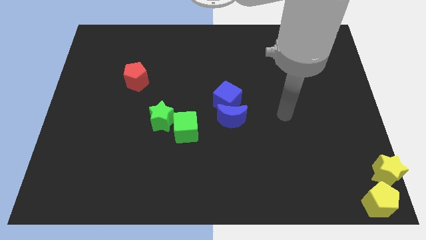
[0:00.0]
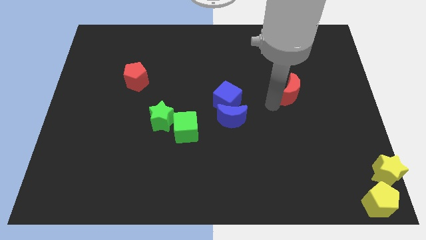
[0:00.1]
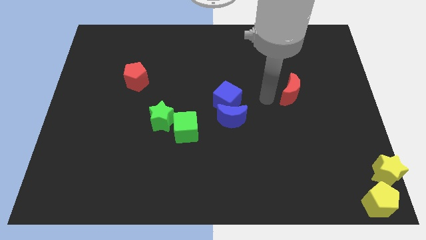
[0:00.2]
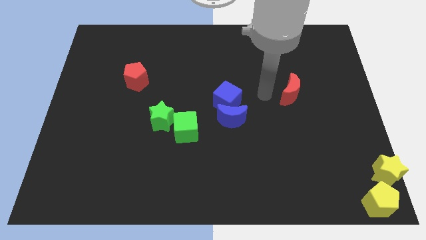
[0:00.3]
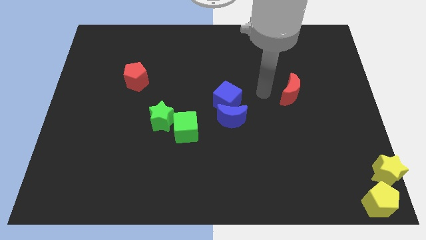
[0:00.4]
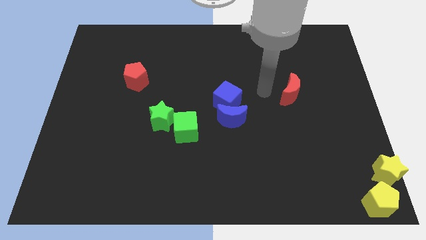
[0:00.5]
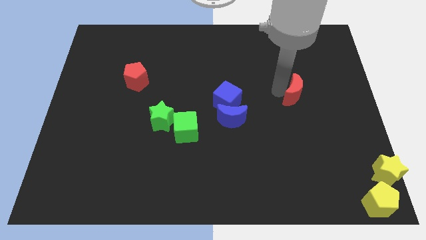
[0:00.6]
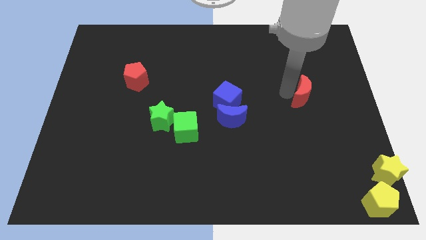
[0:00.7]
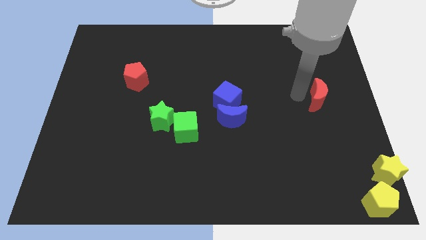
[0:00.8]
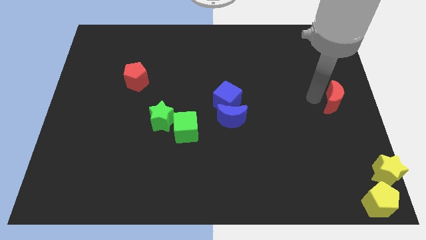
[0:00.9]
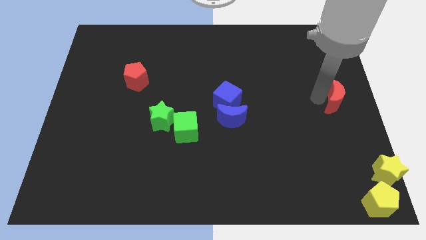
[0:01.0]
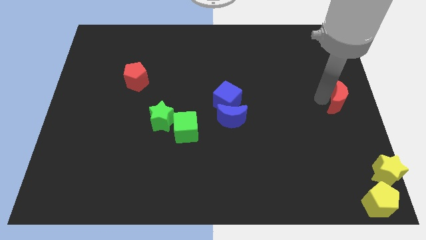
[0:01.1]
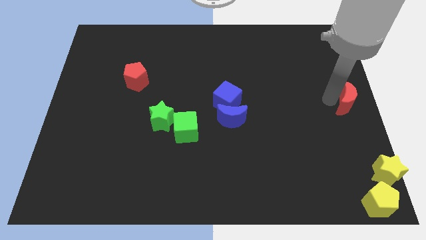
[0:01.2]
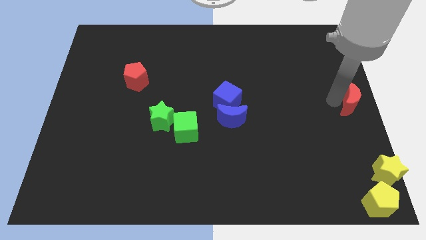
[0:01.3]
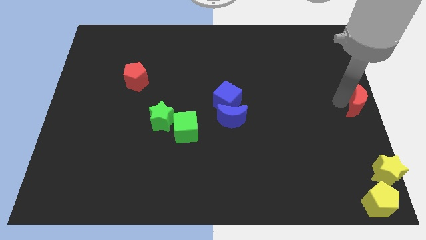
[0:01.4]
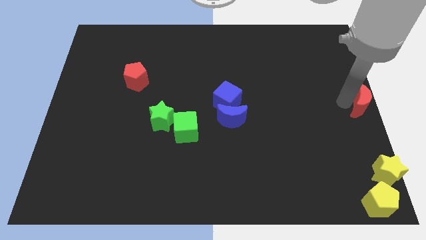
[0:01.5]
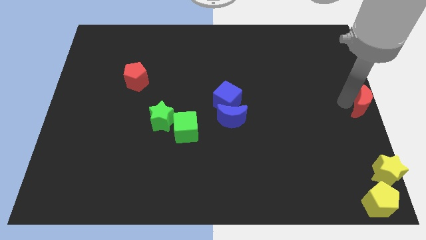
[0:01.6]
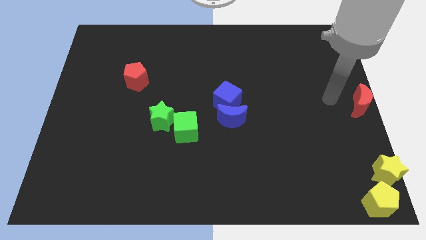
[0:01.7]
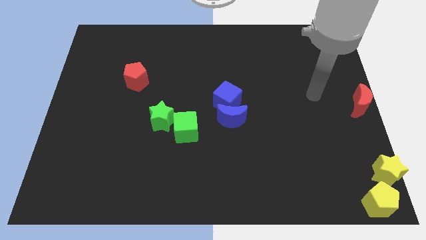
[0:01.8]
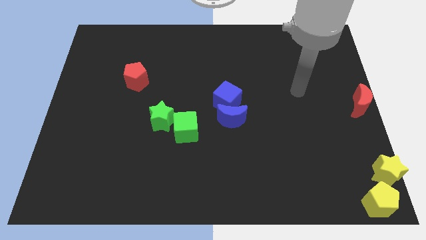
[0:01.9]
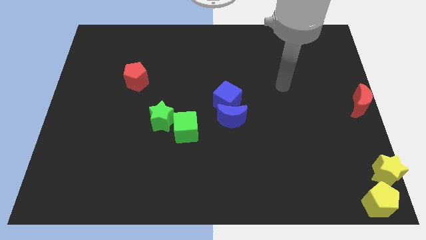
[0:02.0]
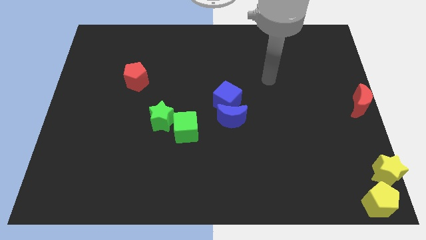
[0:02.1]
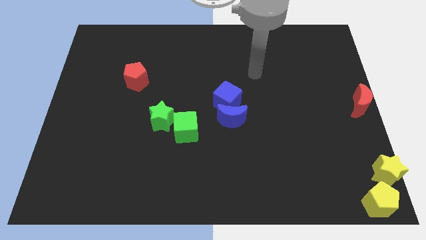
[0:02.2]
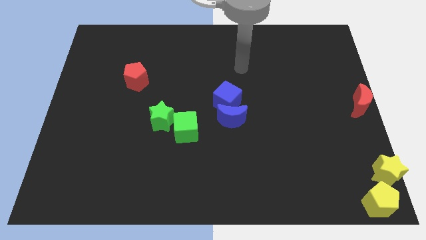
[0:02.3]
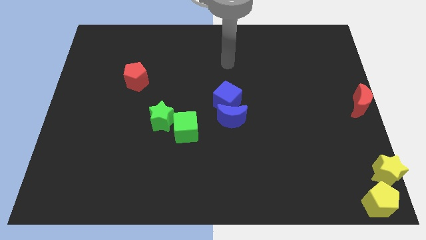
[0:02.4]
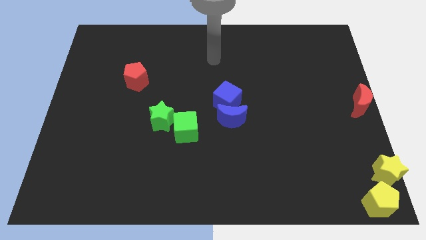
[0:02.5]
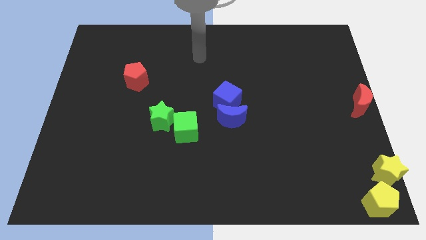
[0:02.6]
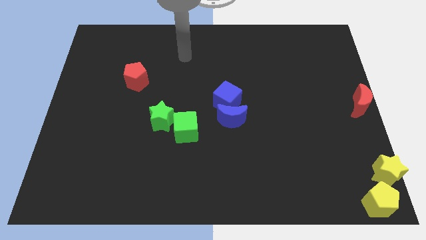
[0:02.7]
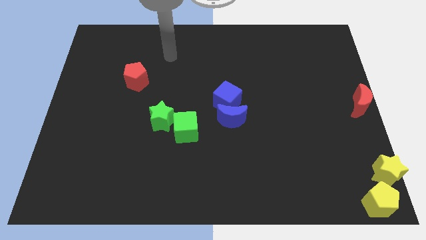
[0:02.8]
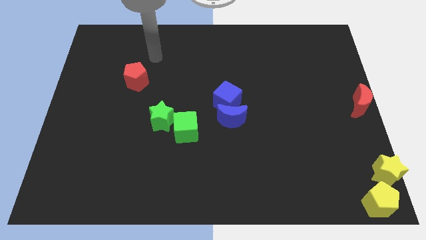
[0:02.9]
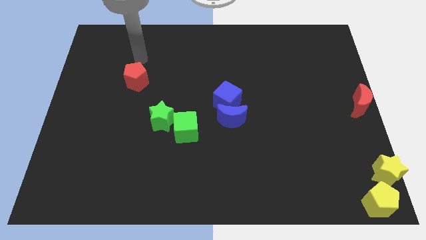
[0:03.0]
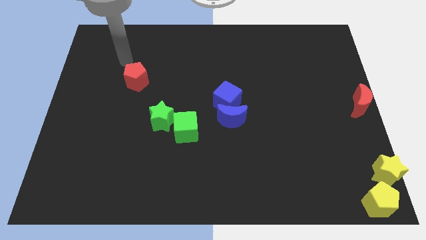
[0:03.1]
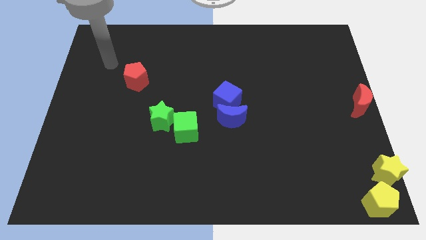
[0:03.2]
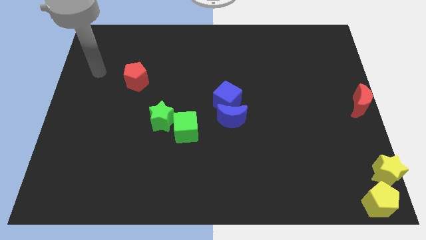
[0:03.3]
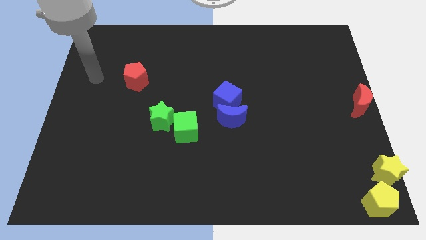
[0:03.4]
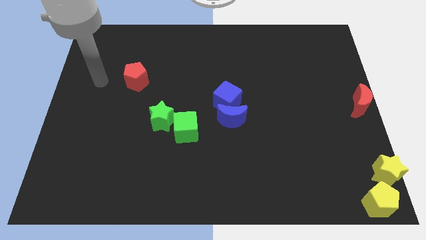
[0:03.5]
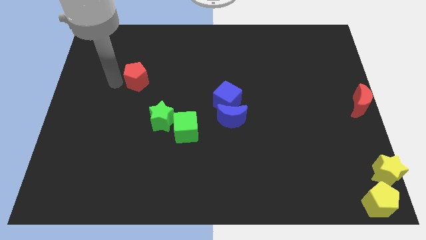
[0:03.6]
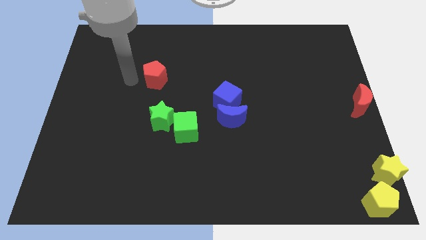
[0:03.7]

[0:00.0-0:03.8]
put the red moon to the center right side of the board

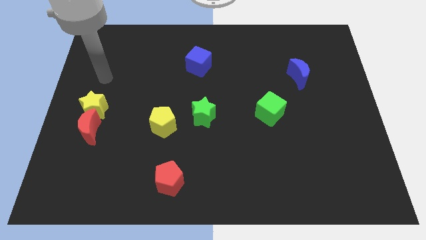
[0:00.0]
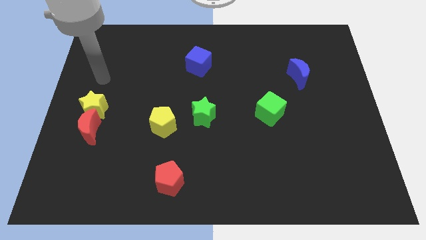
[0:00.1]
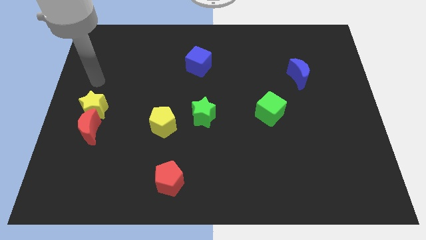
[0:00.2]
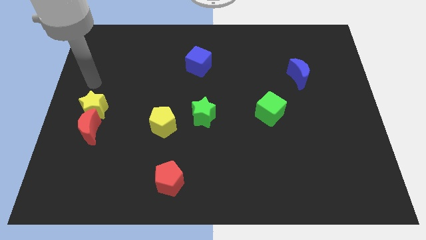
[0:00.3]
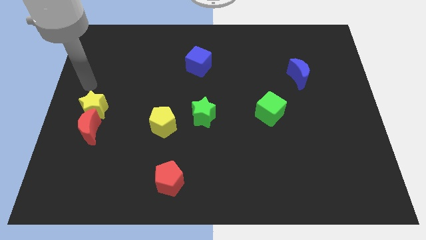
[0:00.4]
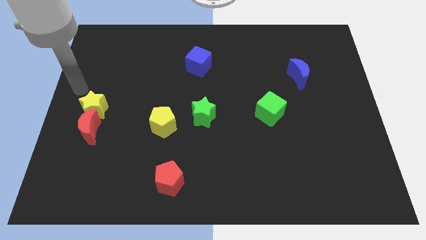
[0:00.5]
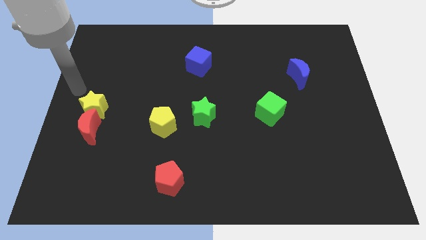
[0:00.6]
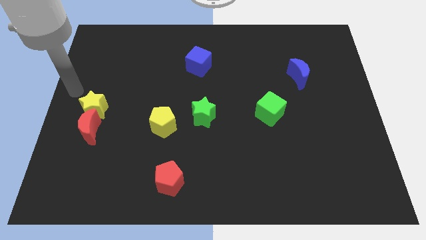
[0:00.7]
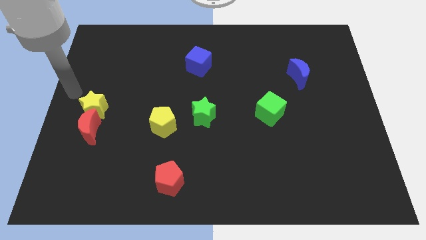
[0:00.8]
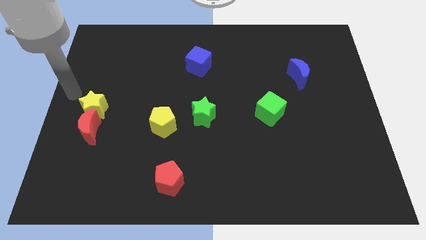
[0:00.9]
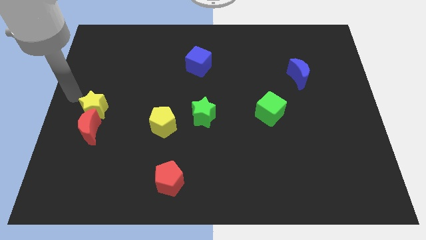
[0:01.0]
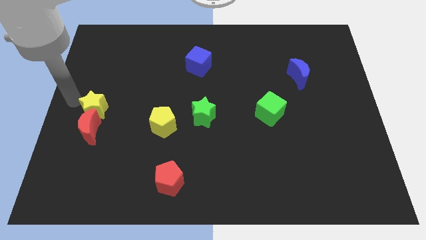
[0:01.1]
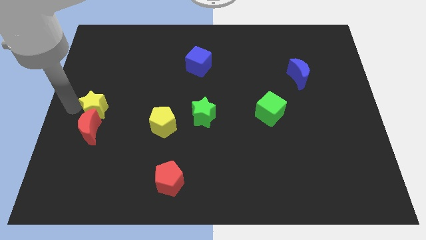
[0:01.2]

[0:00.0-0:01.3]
place your arm towards left side of yellow star

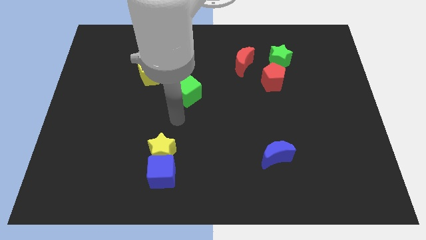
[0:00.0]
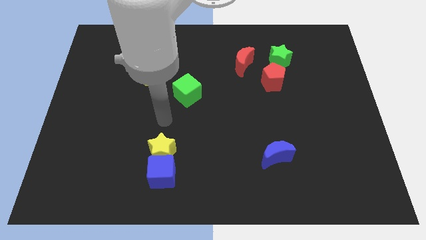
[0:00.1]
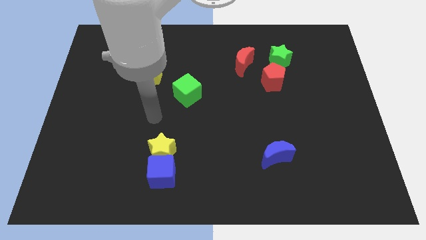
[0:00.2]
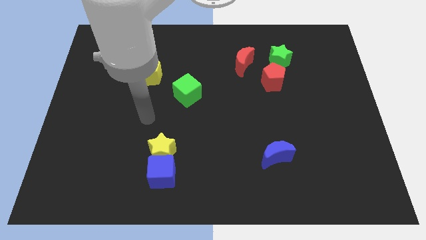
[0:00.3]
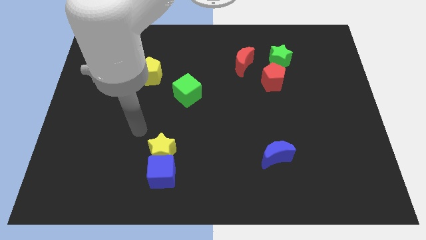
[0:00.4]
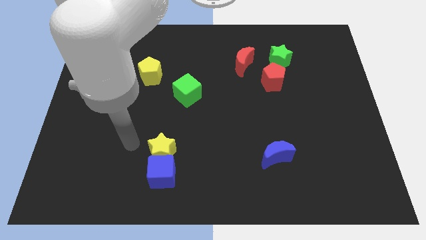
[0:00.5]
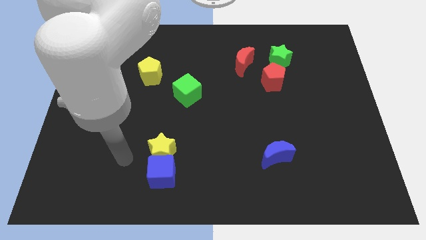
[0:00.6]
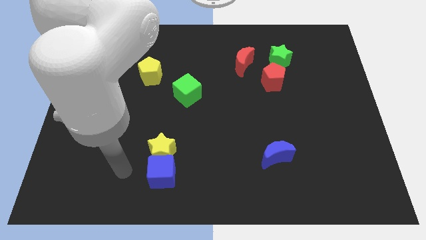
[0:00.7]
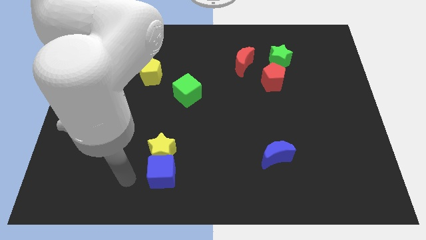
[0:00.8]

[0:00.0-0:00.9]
go away from the green cube

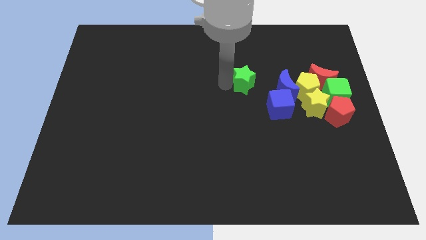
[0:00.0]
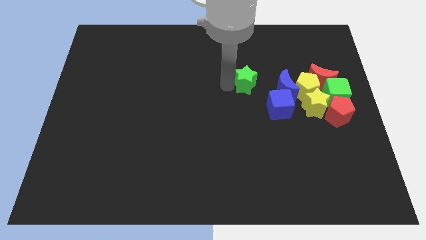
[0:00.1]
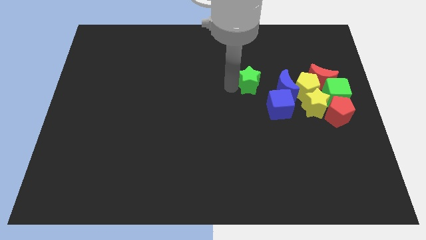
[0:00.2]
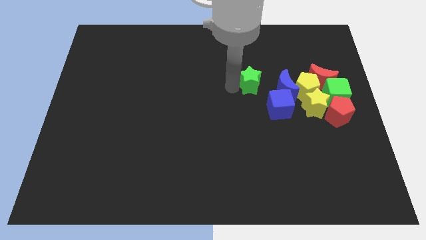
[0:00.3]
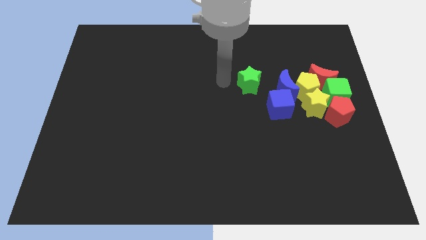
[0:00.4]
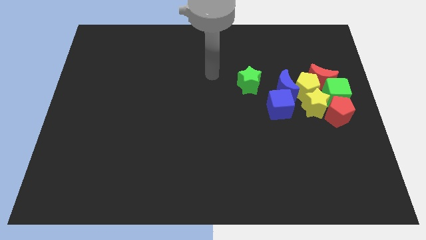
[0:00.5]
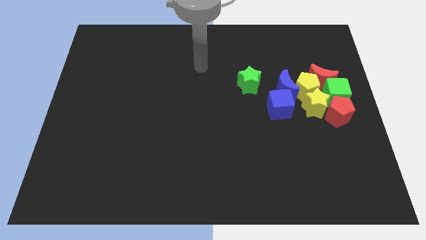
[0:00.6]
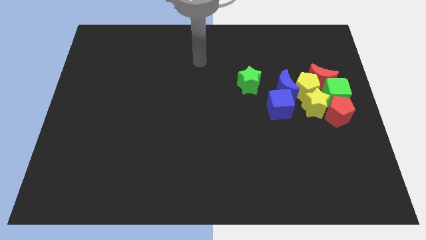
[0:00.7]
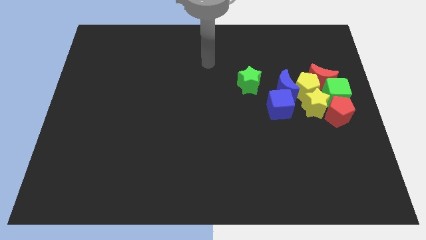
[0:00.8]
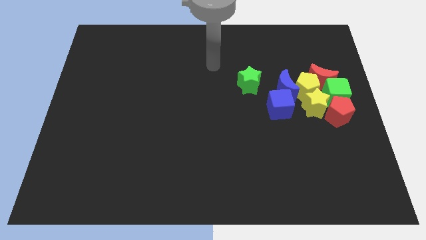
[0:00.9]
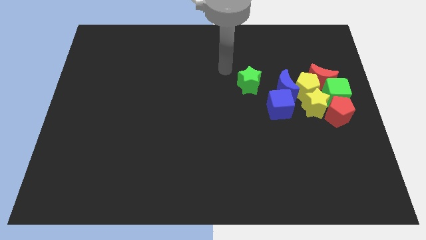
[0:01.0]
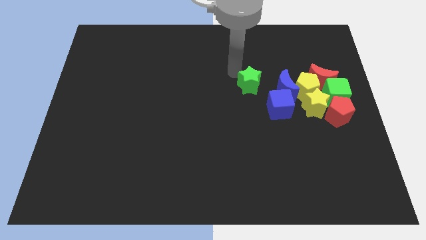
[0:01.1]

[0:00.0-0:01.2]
push the green star towards the blue cube

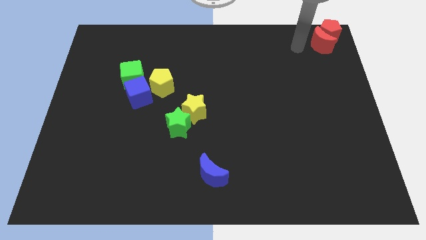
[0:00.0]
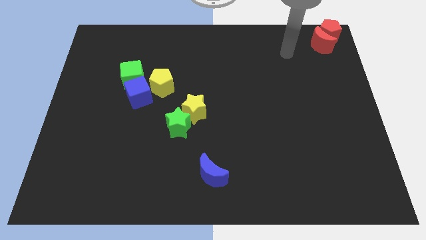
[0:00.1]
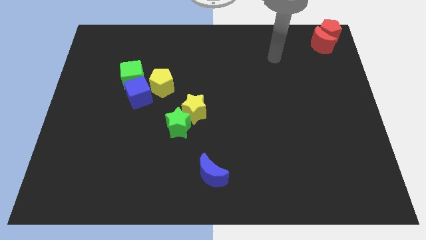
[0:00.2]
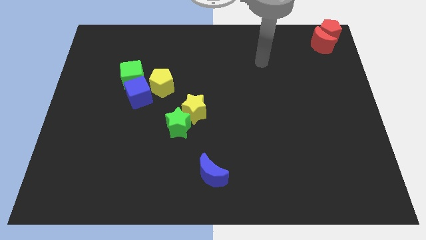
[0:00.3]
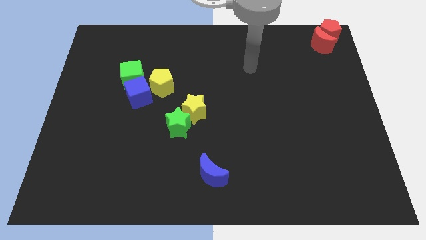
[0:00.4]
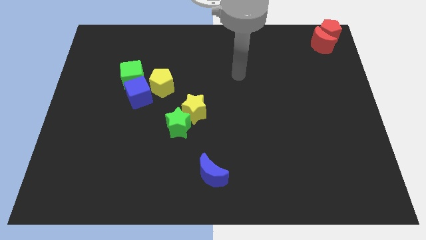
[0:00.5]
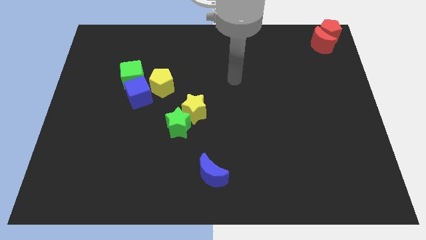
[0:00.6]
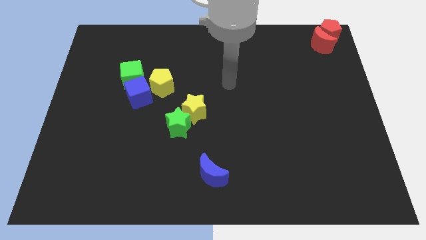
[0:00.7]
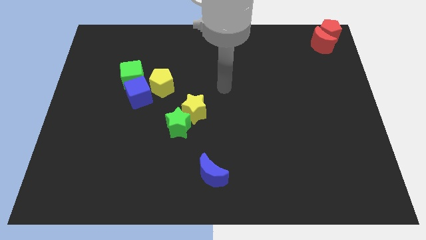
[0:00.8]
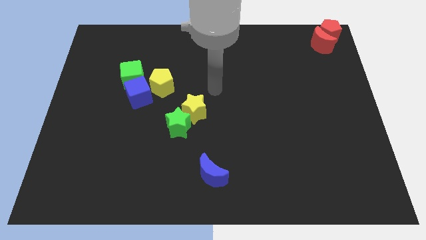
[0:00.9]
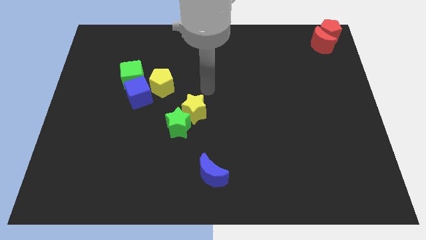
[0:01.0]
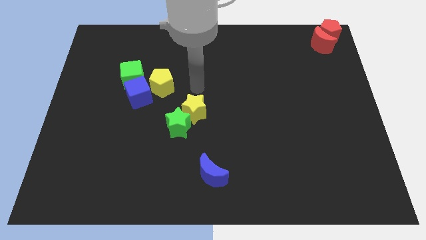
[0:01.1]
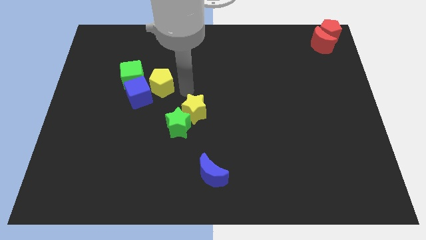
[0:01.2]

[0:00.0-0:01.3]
move the hand to the top of the yellow star

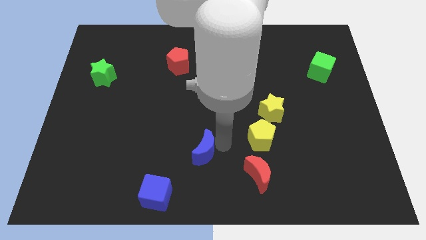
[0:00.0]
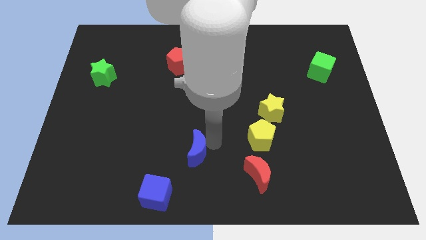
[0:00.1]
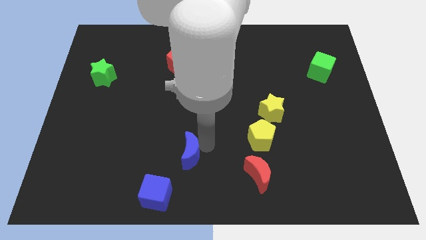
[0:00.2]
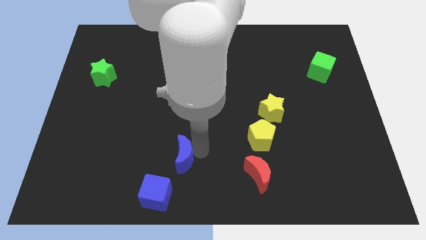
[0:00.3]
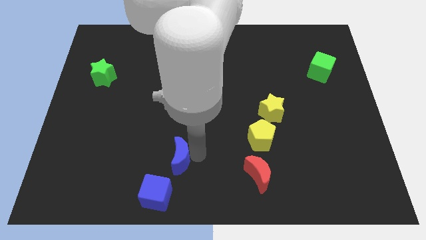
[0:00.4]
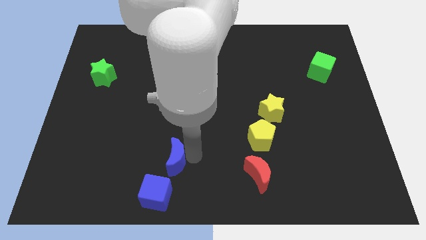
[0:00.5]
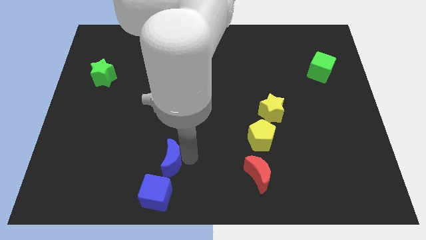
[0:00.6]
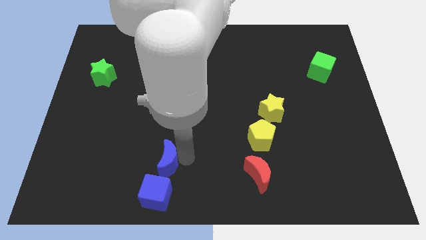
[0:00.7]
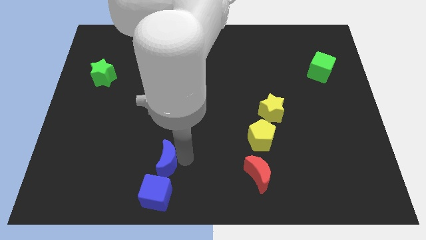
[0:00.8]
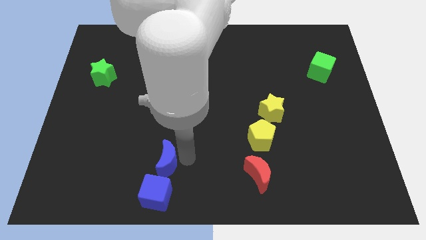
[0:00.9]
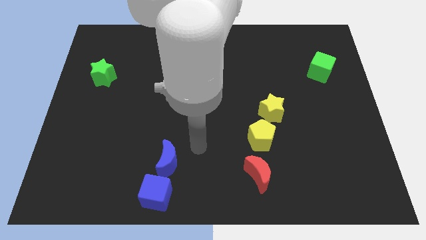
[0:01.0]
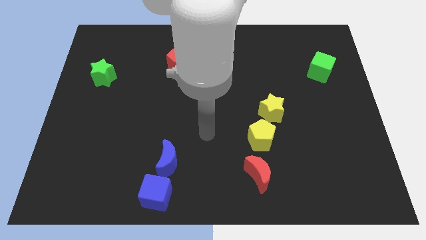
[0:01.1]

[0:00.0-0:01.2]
move the blue crescent above the blue cube
